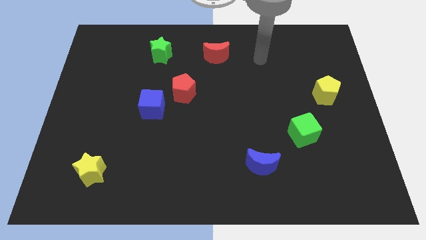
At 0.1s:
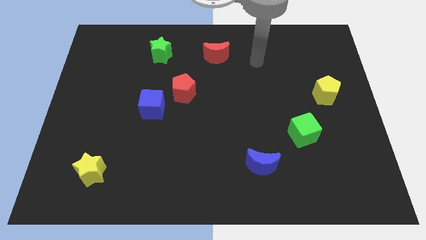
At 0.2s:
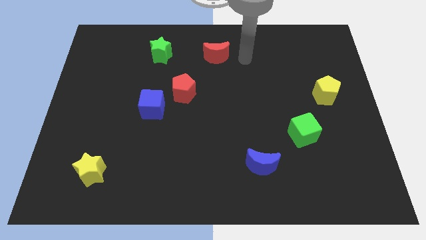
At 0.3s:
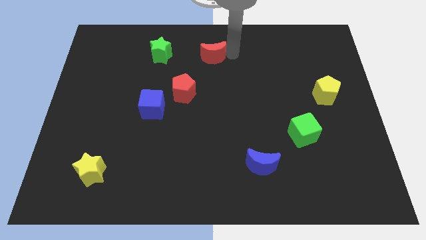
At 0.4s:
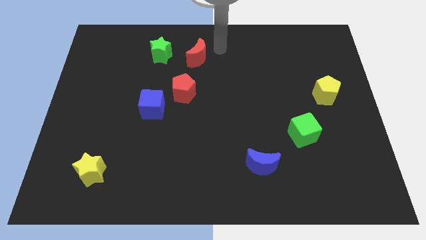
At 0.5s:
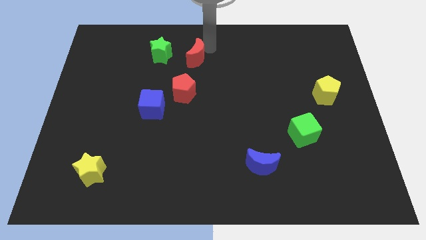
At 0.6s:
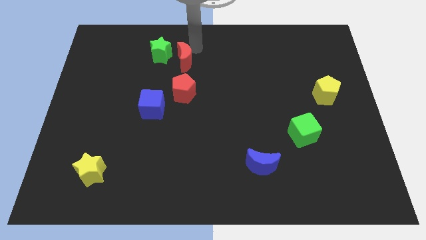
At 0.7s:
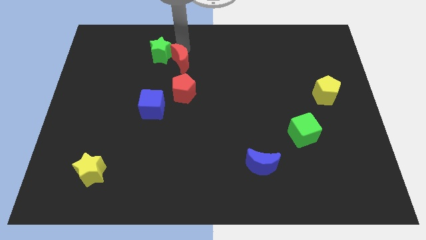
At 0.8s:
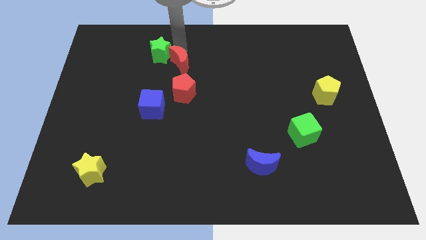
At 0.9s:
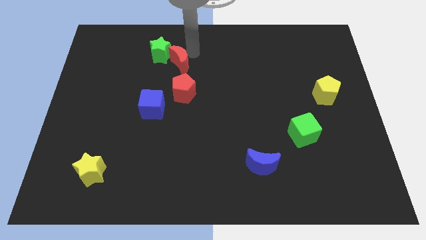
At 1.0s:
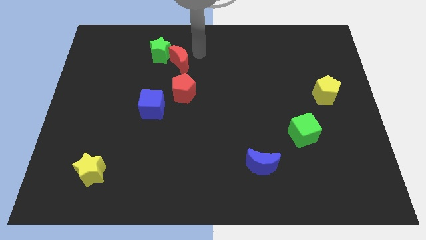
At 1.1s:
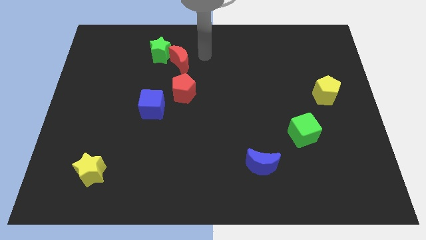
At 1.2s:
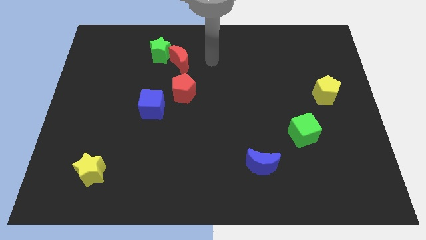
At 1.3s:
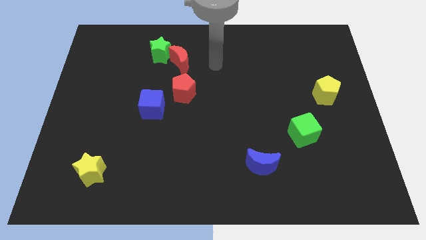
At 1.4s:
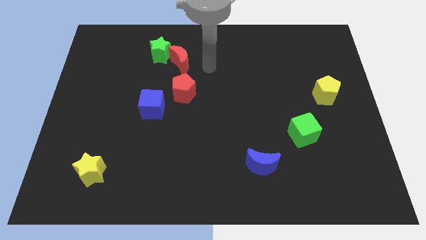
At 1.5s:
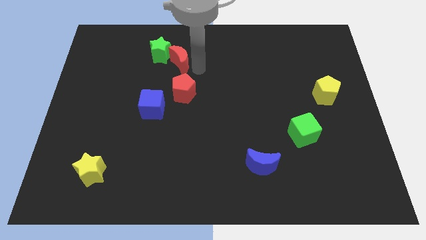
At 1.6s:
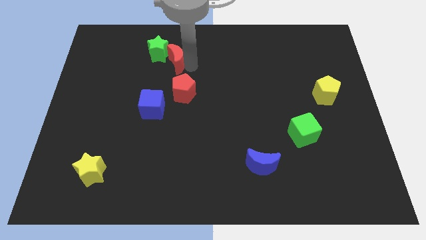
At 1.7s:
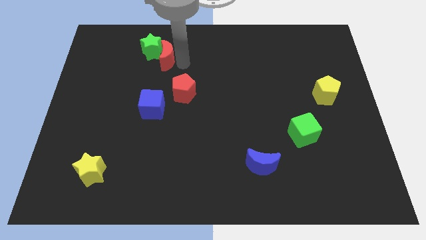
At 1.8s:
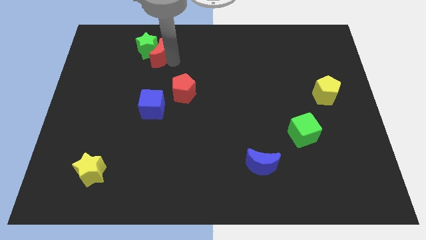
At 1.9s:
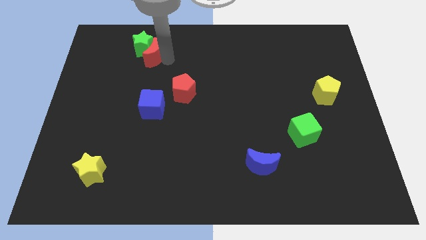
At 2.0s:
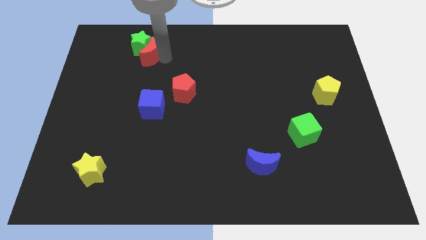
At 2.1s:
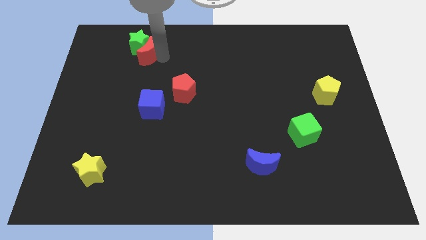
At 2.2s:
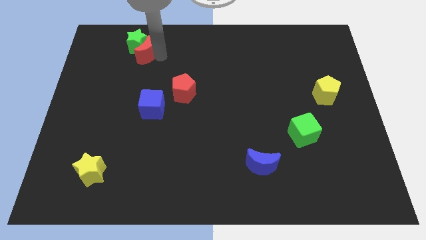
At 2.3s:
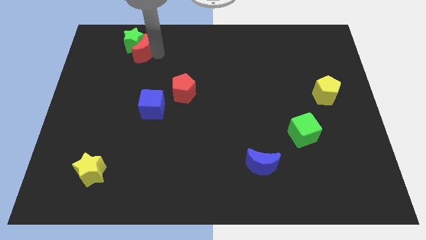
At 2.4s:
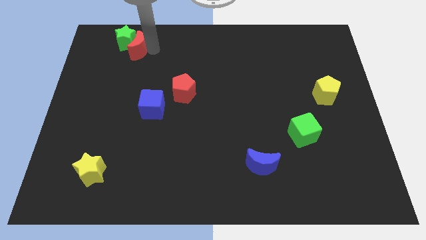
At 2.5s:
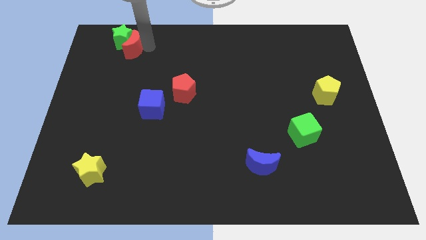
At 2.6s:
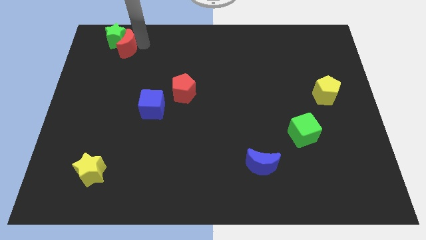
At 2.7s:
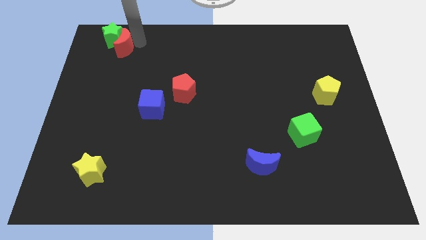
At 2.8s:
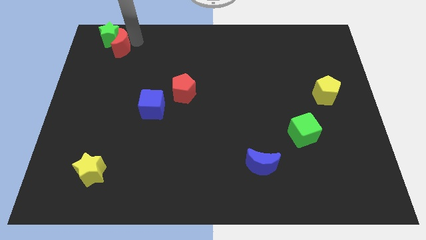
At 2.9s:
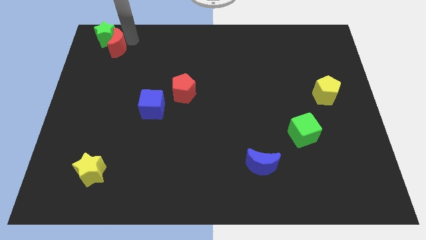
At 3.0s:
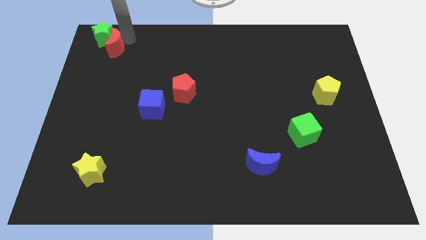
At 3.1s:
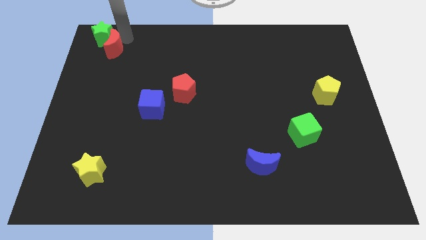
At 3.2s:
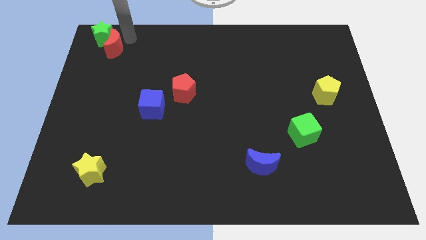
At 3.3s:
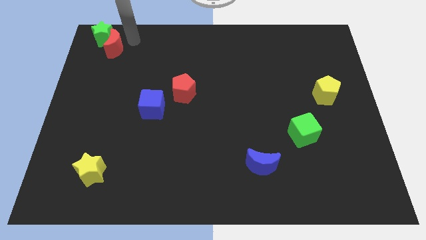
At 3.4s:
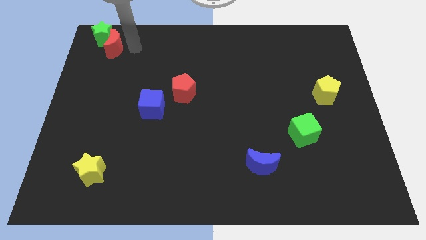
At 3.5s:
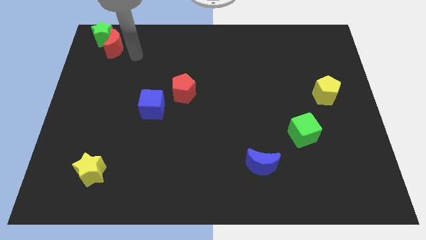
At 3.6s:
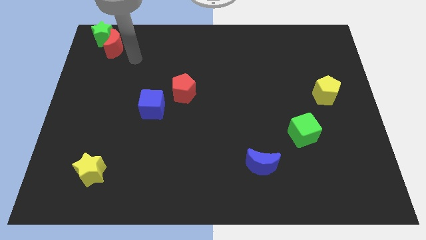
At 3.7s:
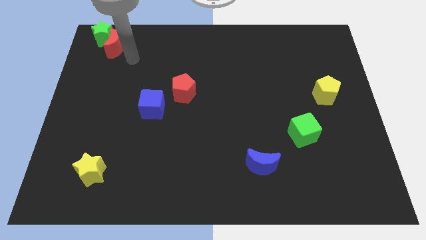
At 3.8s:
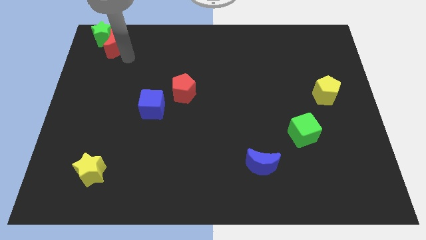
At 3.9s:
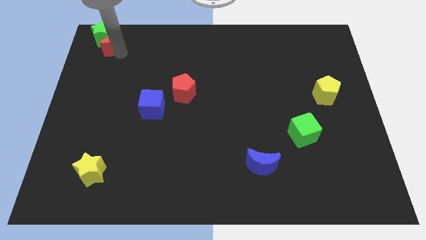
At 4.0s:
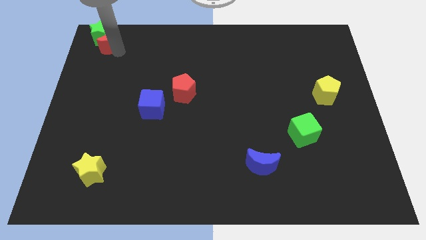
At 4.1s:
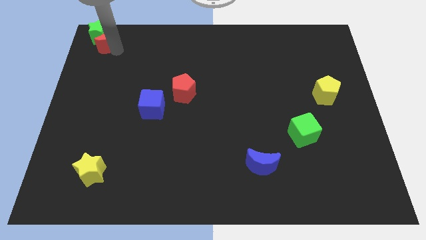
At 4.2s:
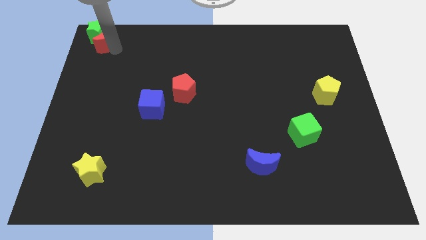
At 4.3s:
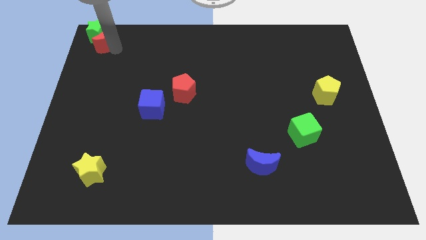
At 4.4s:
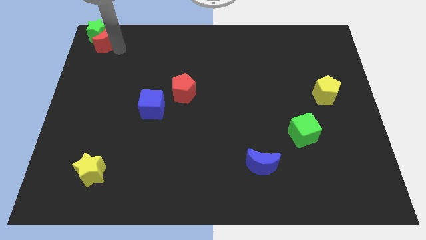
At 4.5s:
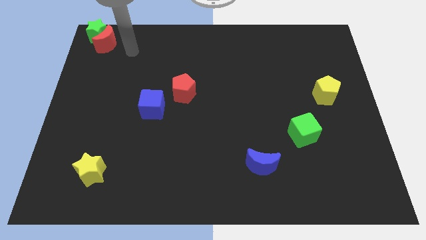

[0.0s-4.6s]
push the red crescent into the green star

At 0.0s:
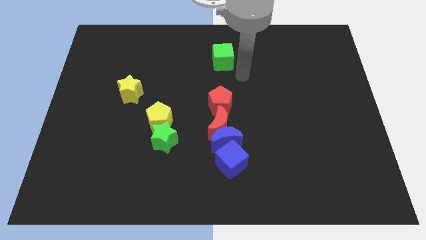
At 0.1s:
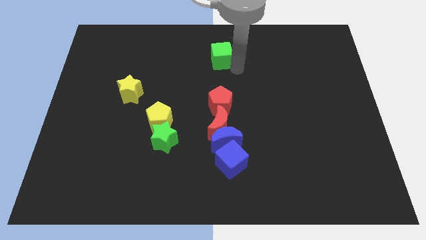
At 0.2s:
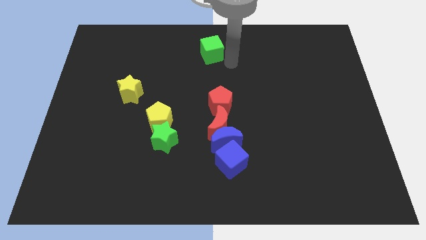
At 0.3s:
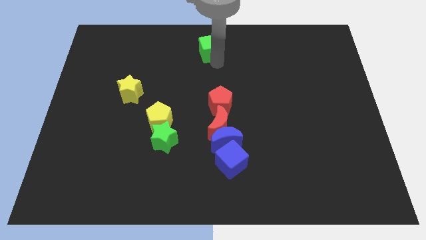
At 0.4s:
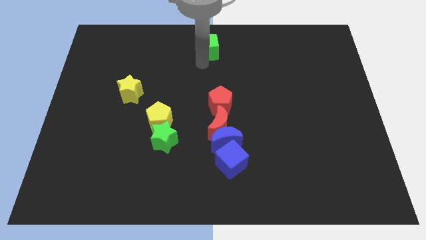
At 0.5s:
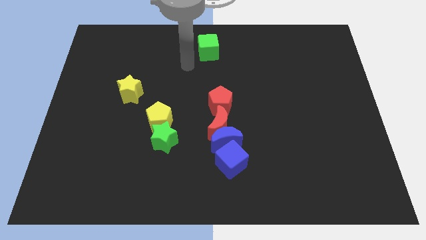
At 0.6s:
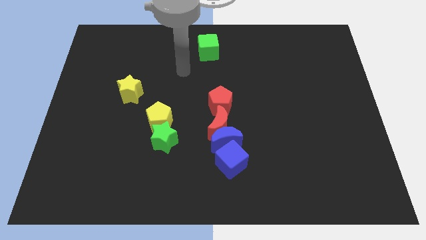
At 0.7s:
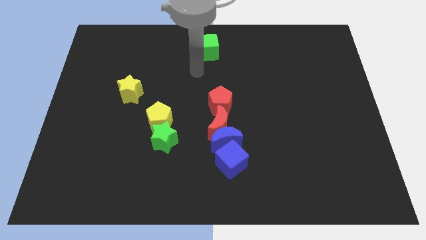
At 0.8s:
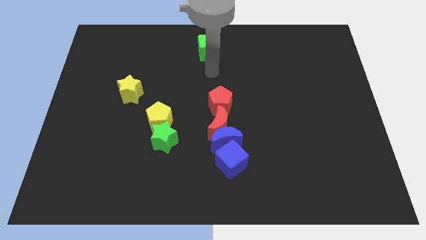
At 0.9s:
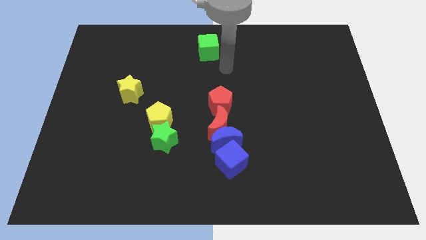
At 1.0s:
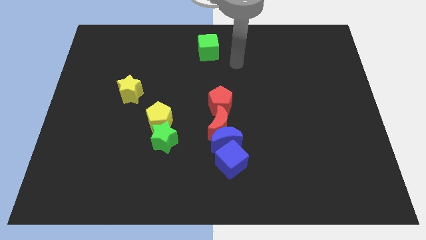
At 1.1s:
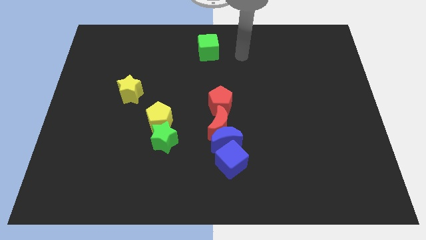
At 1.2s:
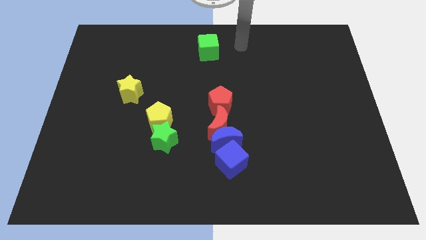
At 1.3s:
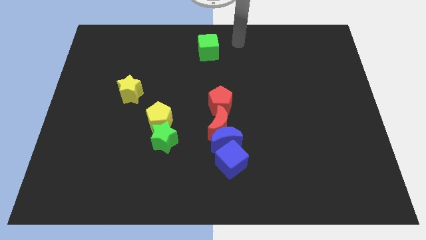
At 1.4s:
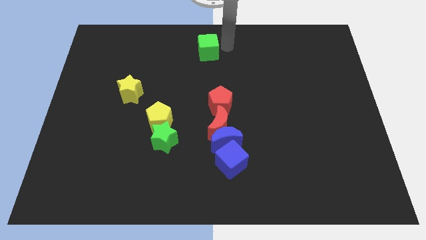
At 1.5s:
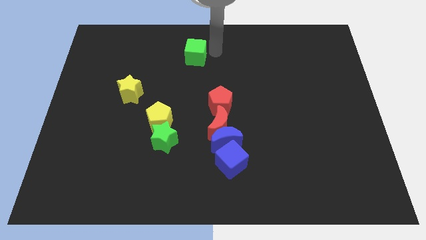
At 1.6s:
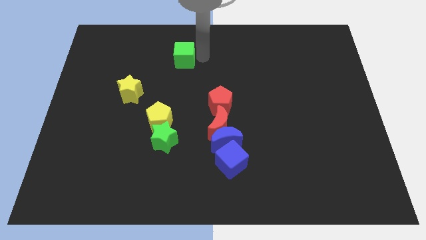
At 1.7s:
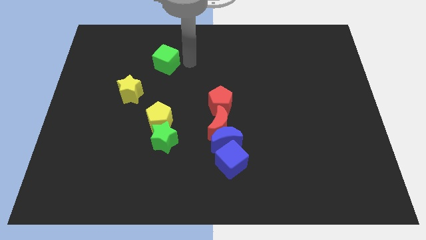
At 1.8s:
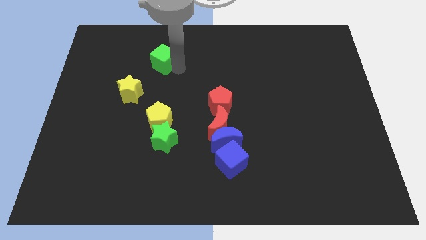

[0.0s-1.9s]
place the green cube vertically on the top side of the yellow pentagon

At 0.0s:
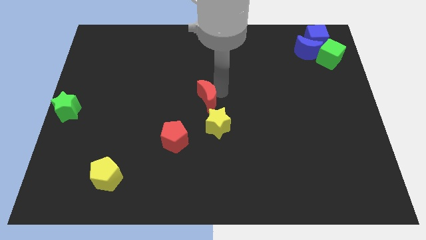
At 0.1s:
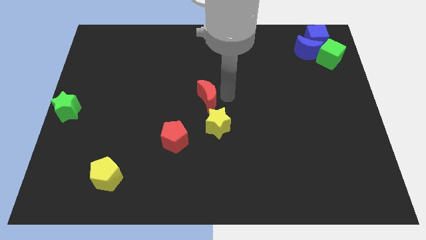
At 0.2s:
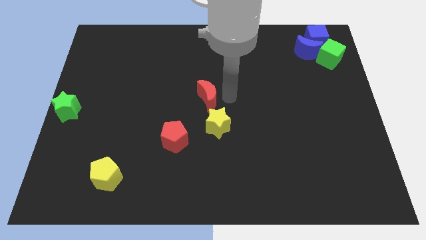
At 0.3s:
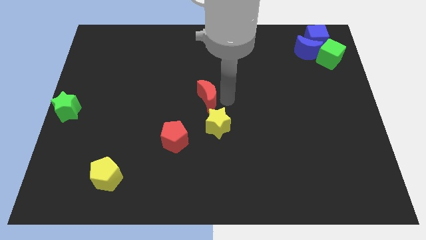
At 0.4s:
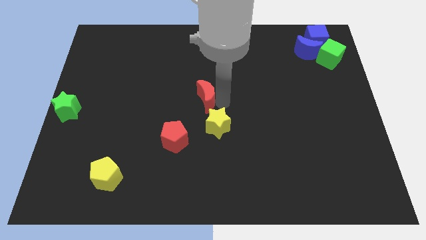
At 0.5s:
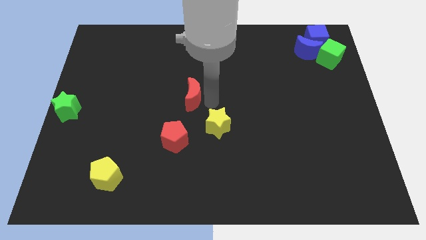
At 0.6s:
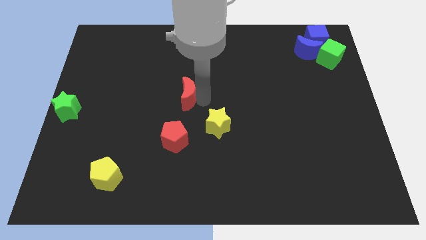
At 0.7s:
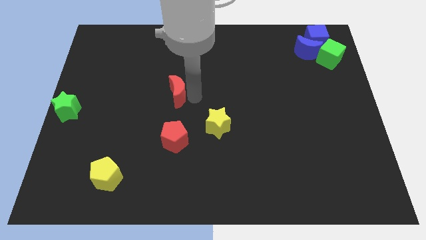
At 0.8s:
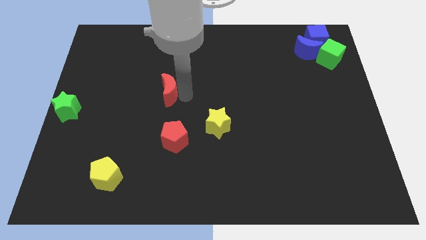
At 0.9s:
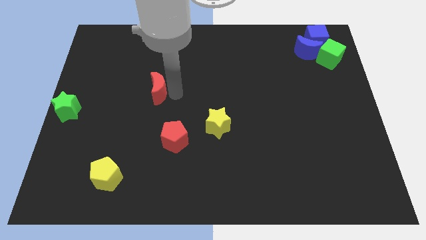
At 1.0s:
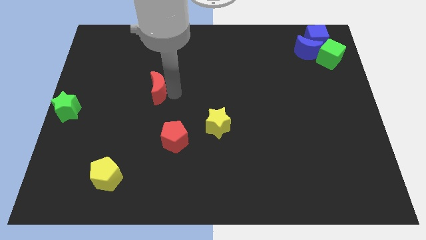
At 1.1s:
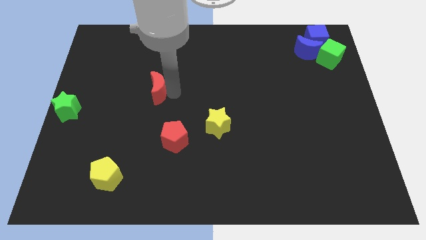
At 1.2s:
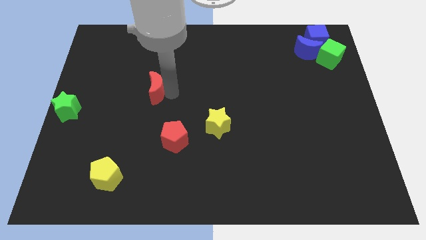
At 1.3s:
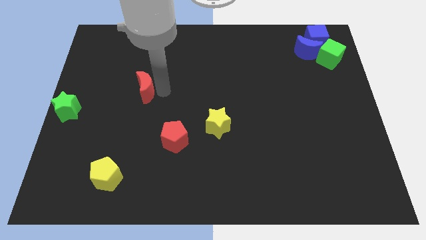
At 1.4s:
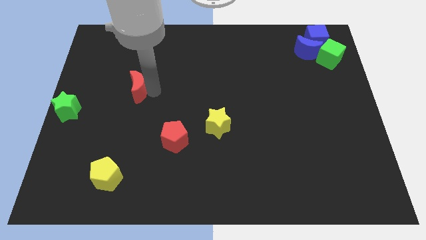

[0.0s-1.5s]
separate the red crescent from the yellow star

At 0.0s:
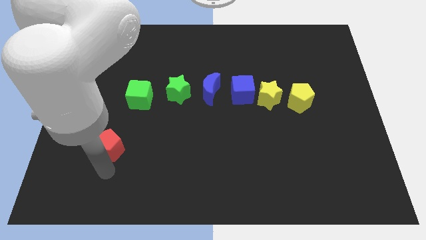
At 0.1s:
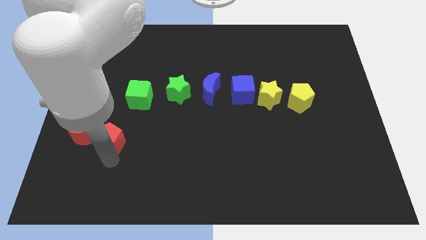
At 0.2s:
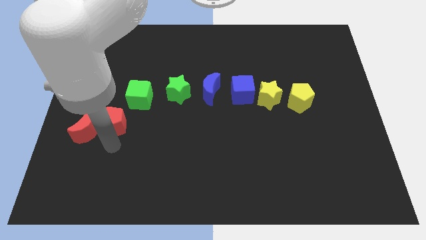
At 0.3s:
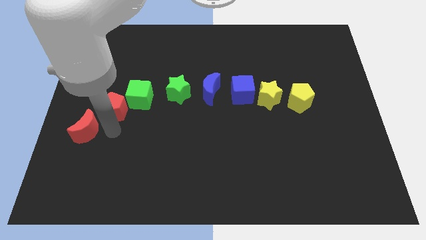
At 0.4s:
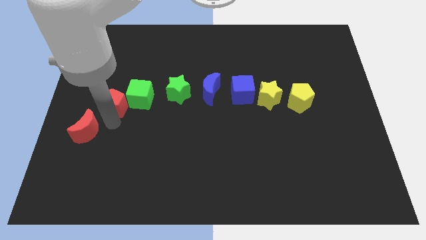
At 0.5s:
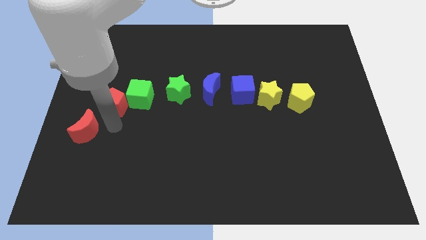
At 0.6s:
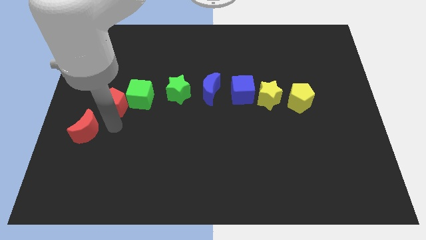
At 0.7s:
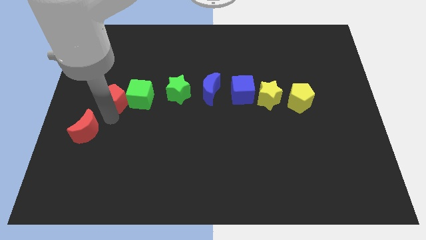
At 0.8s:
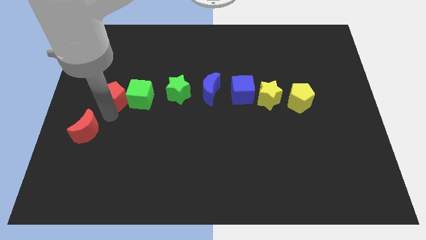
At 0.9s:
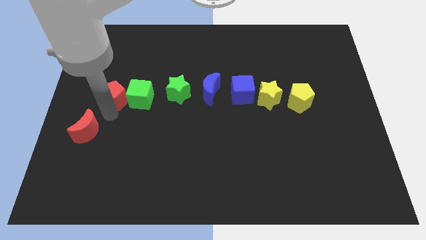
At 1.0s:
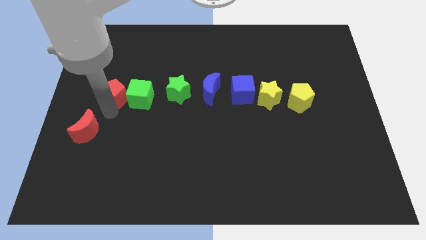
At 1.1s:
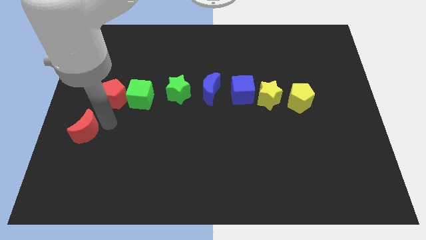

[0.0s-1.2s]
push the red pentagon to the left of the green cube
